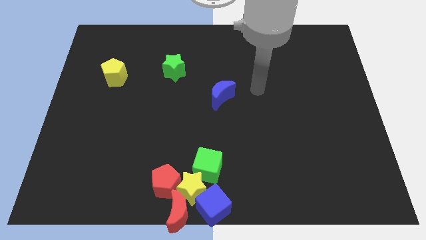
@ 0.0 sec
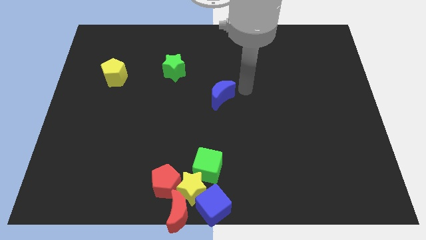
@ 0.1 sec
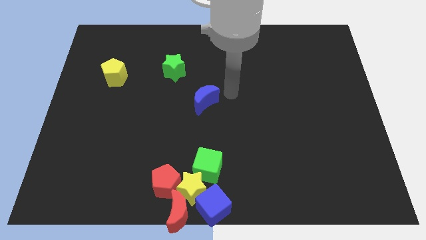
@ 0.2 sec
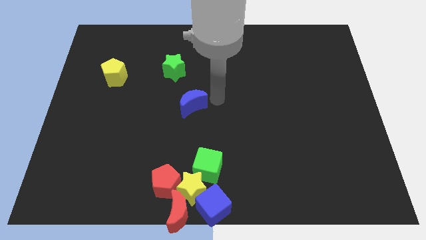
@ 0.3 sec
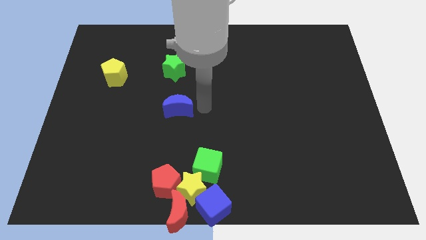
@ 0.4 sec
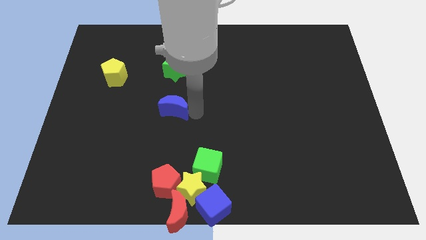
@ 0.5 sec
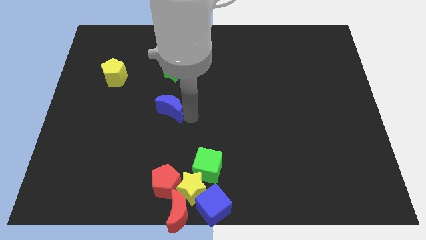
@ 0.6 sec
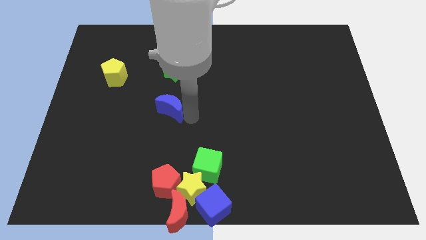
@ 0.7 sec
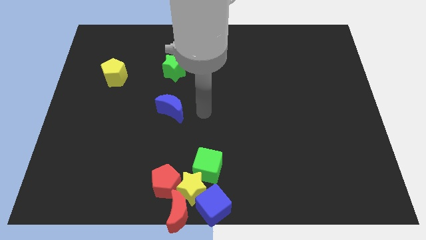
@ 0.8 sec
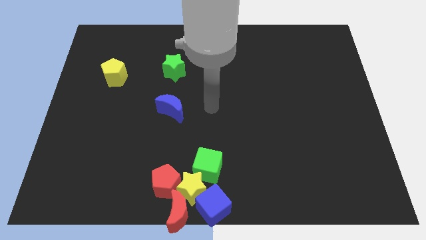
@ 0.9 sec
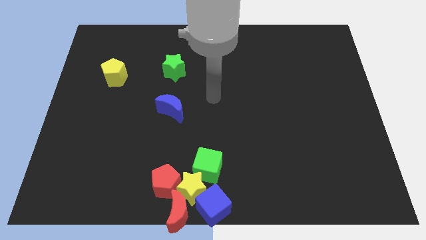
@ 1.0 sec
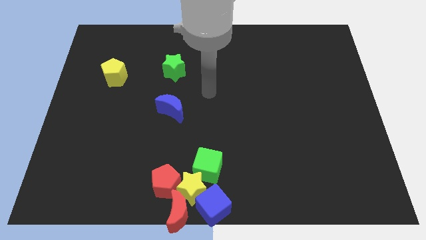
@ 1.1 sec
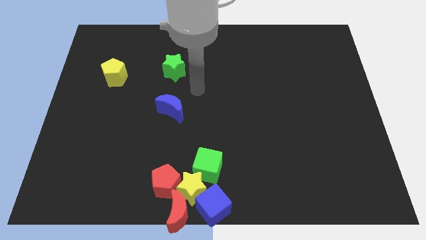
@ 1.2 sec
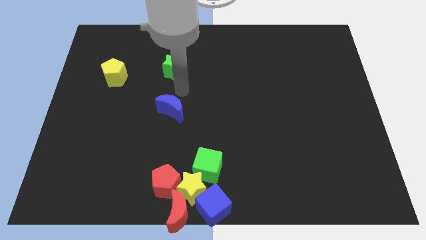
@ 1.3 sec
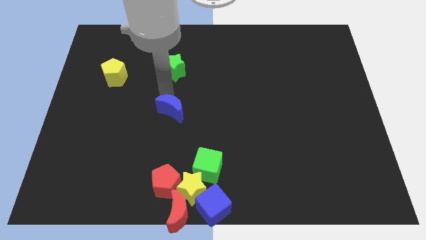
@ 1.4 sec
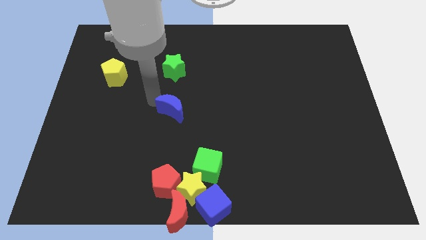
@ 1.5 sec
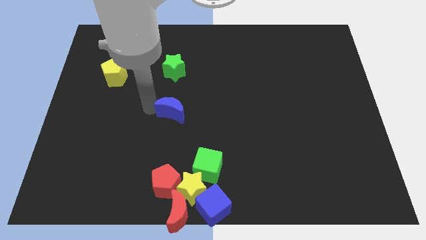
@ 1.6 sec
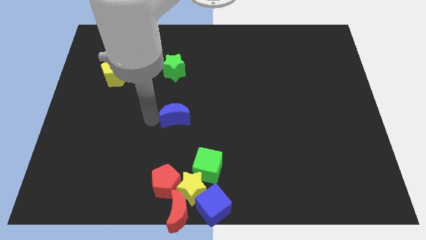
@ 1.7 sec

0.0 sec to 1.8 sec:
move the blue crescent below the green star

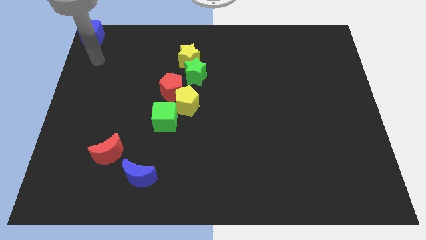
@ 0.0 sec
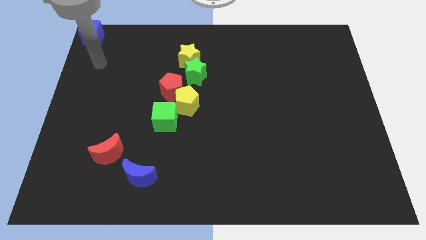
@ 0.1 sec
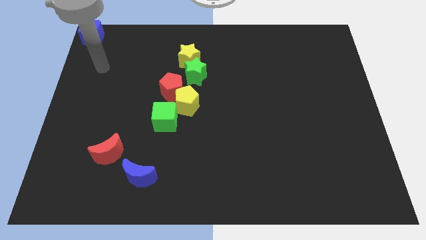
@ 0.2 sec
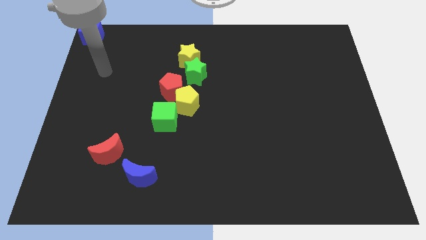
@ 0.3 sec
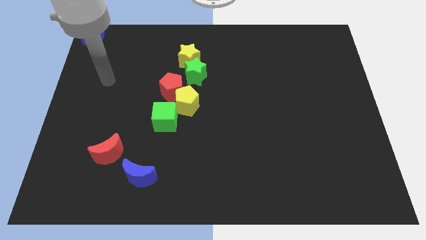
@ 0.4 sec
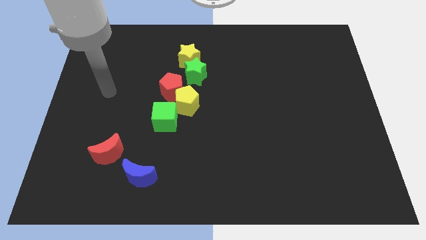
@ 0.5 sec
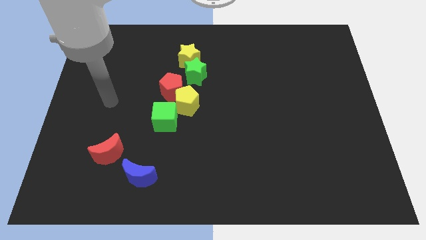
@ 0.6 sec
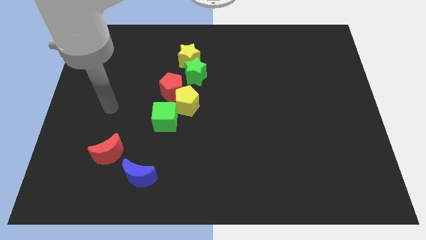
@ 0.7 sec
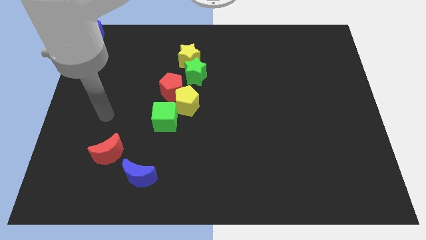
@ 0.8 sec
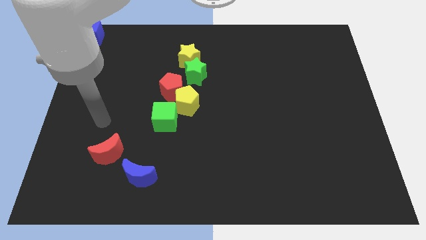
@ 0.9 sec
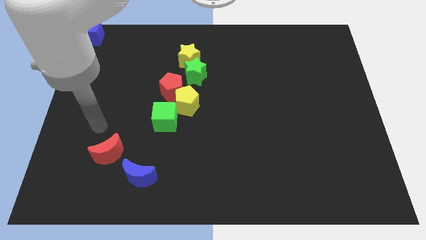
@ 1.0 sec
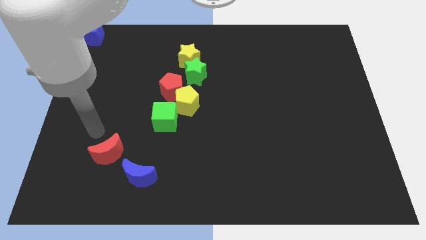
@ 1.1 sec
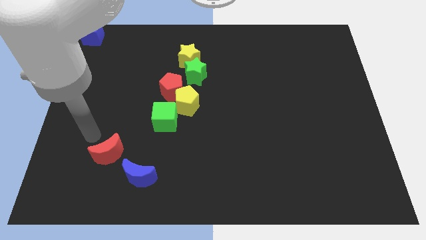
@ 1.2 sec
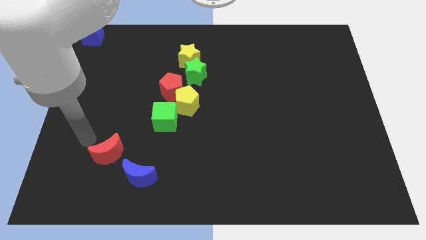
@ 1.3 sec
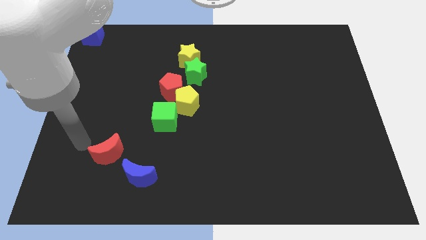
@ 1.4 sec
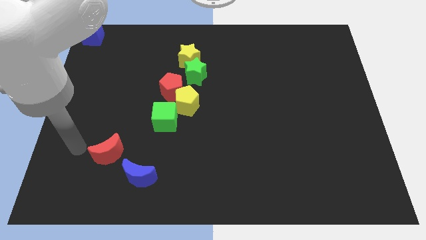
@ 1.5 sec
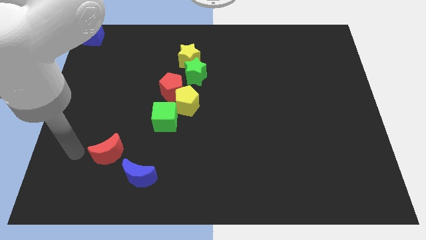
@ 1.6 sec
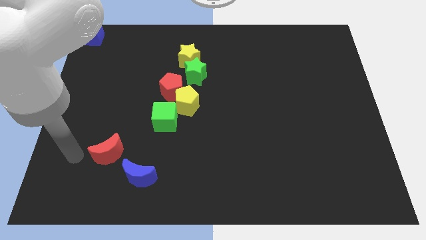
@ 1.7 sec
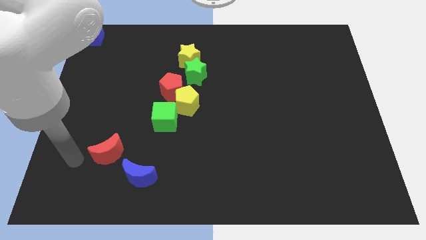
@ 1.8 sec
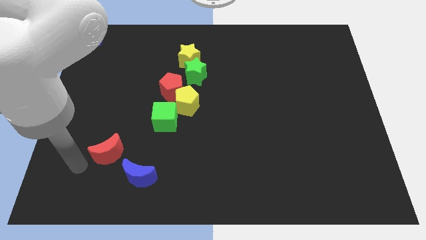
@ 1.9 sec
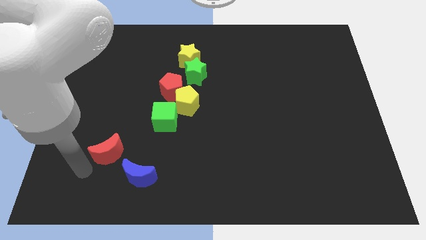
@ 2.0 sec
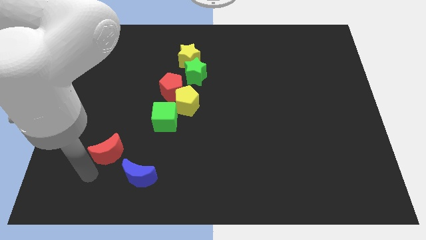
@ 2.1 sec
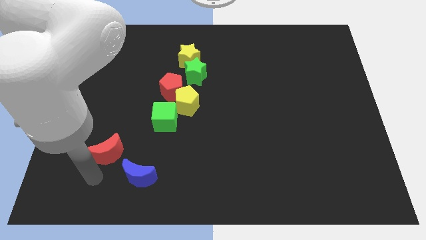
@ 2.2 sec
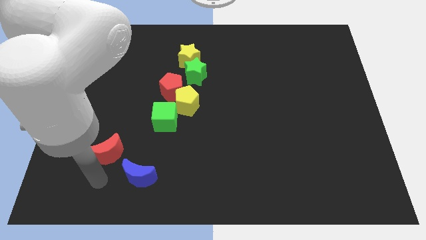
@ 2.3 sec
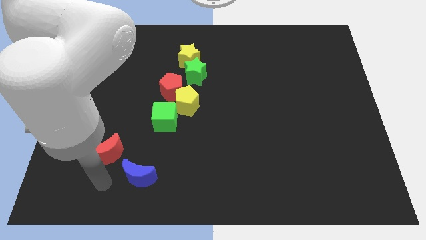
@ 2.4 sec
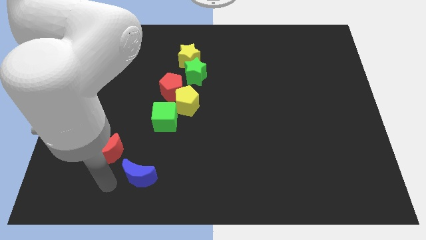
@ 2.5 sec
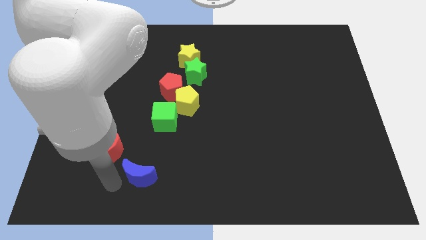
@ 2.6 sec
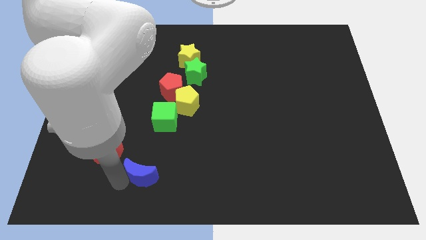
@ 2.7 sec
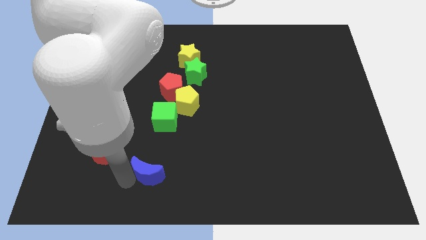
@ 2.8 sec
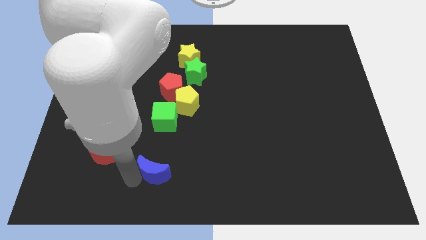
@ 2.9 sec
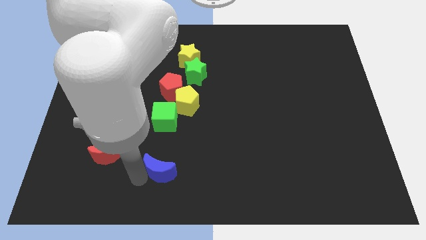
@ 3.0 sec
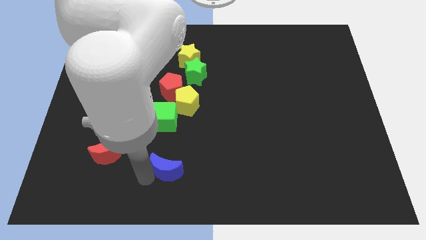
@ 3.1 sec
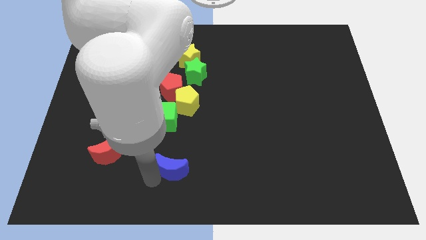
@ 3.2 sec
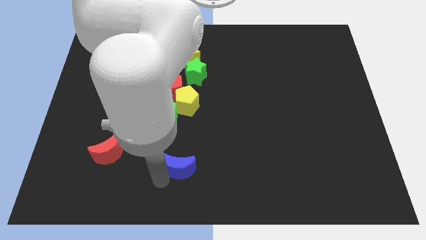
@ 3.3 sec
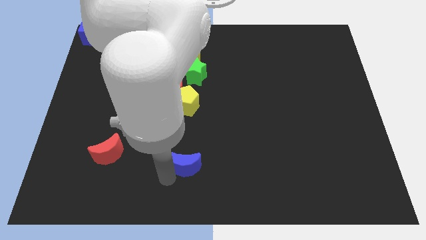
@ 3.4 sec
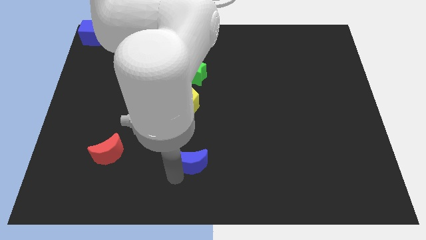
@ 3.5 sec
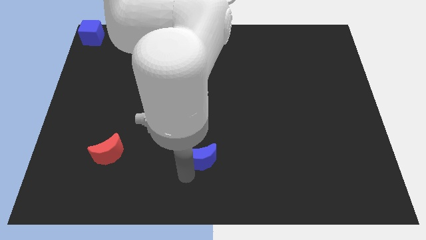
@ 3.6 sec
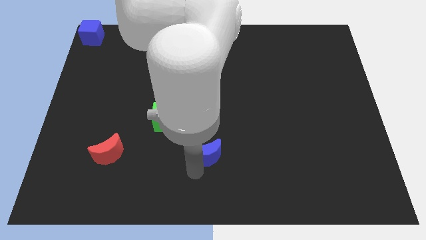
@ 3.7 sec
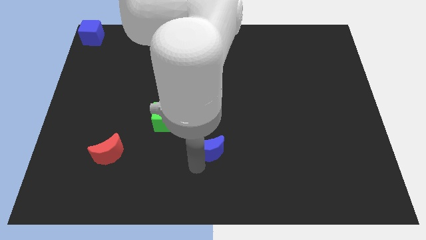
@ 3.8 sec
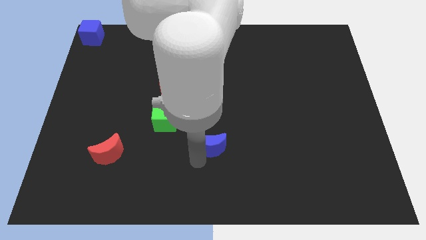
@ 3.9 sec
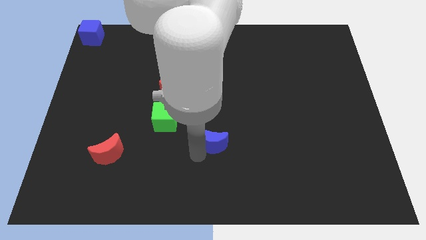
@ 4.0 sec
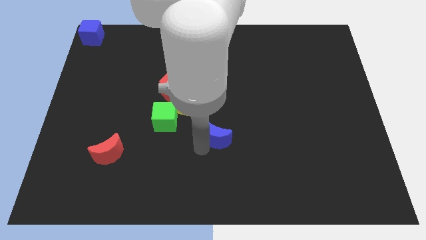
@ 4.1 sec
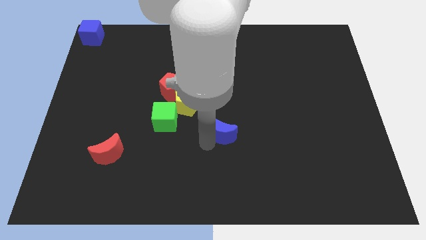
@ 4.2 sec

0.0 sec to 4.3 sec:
push the blue moon towards the center of the board

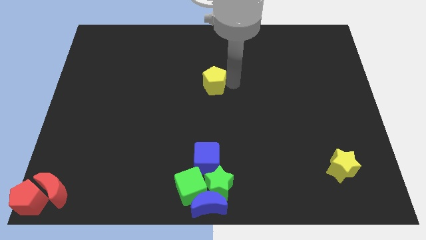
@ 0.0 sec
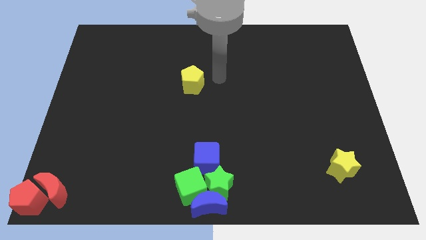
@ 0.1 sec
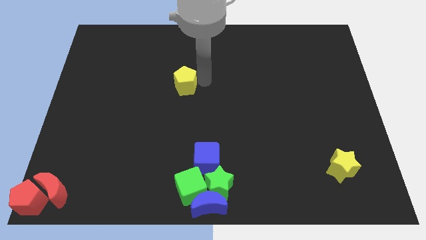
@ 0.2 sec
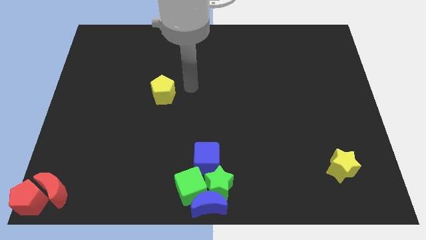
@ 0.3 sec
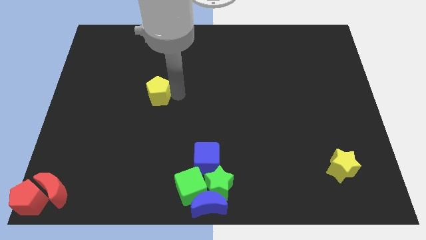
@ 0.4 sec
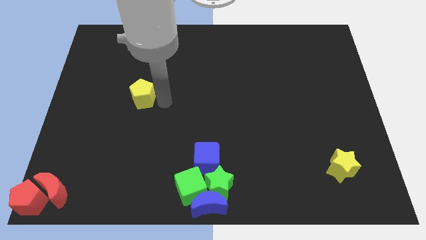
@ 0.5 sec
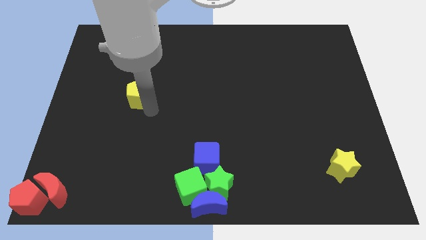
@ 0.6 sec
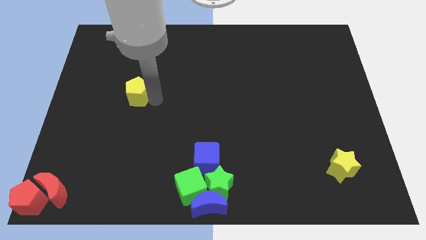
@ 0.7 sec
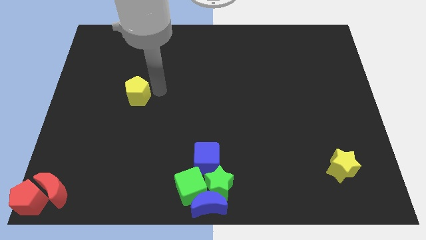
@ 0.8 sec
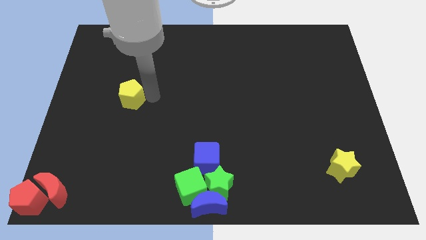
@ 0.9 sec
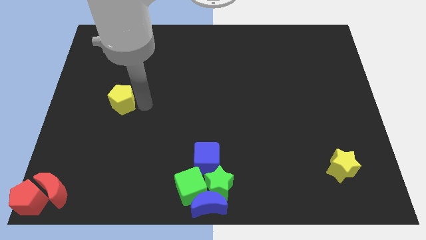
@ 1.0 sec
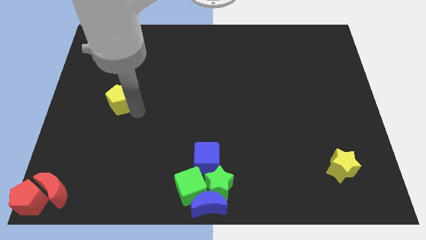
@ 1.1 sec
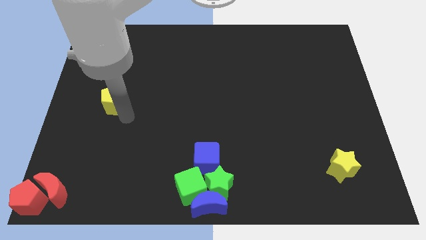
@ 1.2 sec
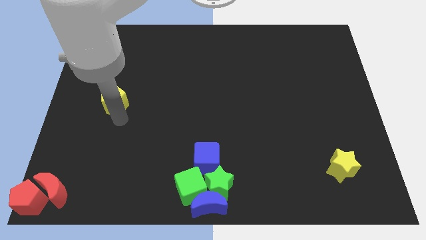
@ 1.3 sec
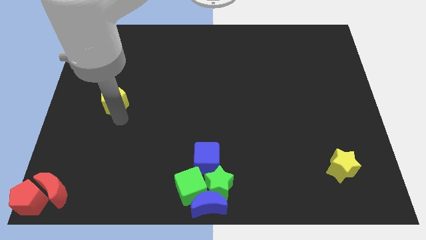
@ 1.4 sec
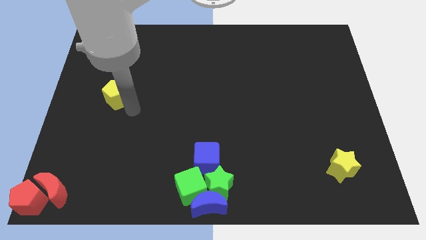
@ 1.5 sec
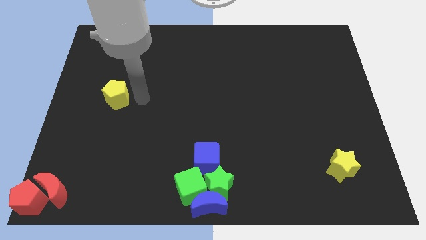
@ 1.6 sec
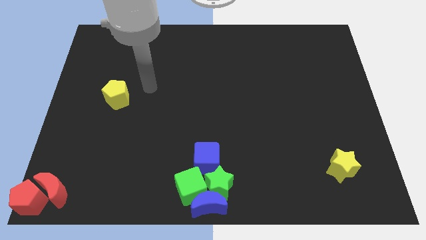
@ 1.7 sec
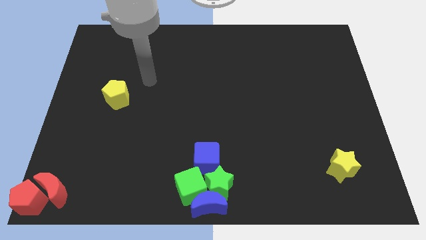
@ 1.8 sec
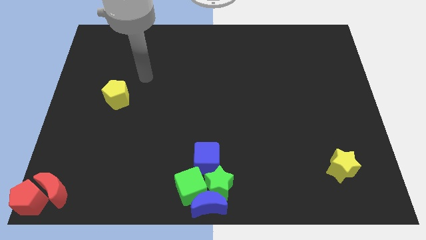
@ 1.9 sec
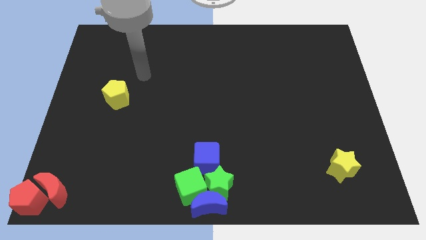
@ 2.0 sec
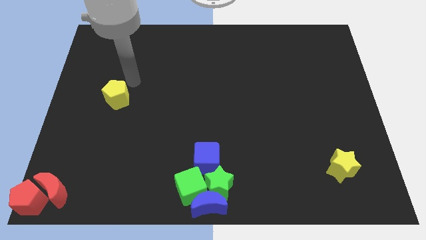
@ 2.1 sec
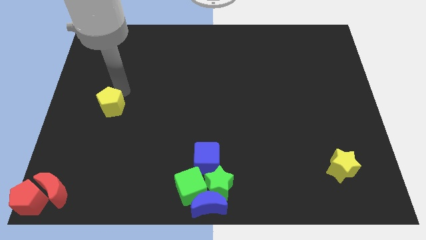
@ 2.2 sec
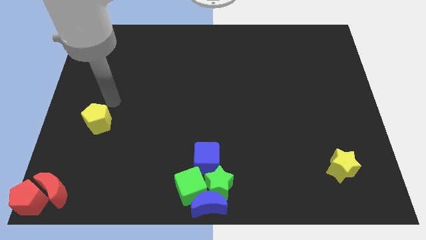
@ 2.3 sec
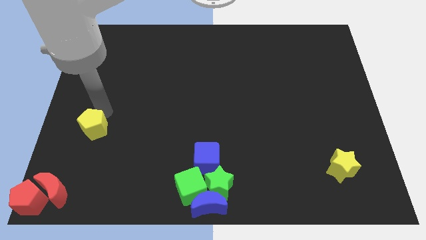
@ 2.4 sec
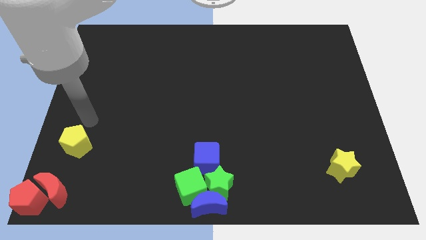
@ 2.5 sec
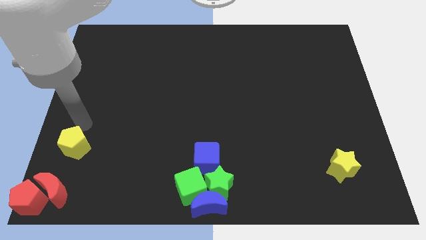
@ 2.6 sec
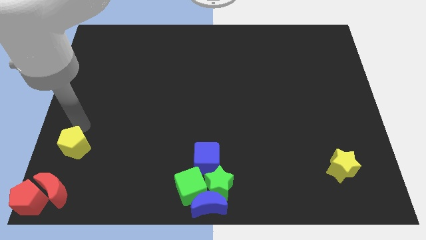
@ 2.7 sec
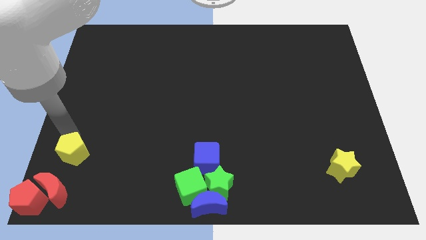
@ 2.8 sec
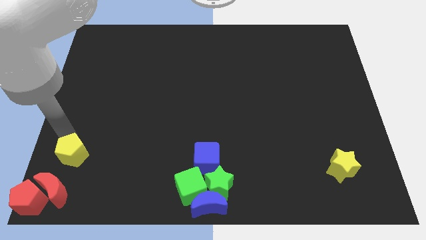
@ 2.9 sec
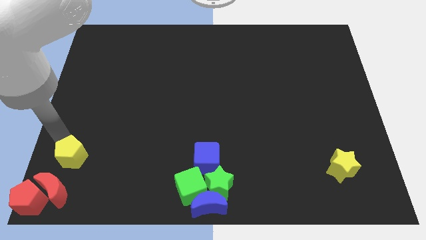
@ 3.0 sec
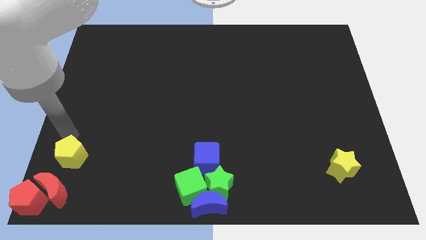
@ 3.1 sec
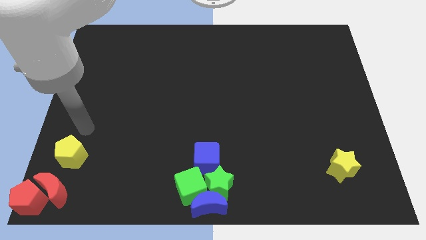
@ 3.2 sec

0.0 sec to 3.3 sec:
move the yellow pentagon towards bottom
